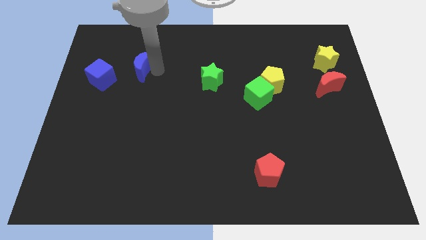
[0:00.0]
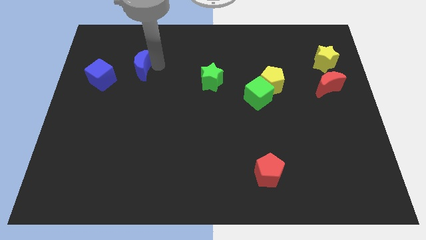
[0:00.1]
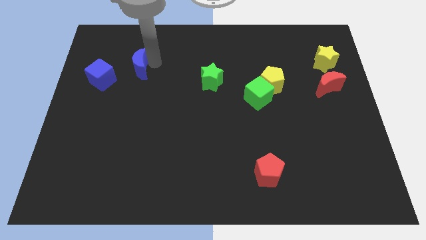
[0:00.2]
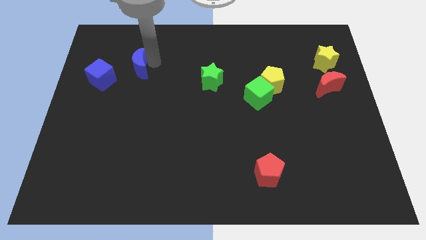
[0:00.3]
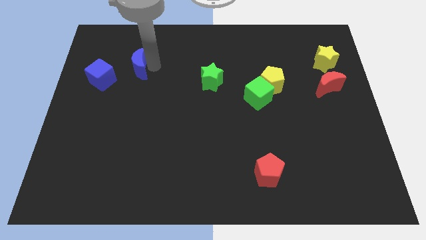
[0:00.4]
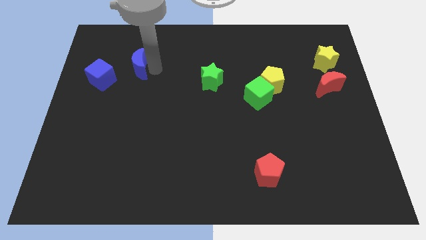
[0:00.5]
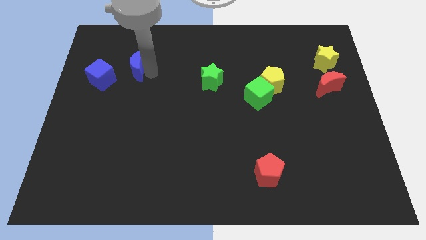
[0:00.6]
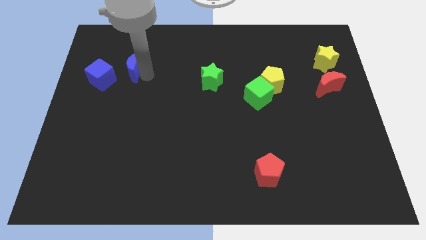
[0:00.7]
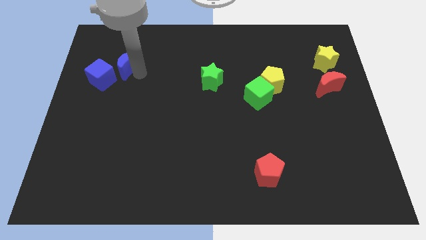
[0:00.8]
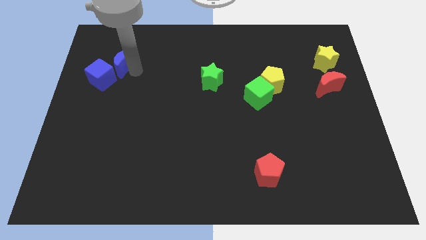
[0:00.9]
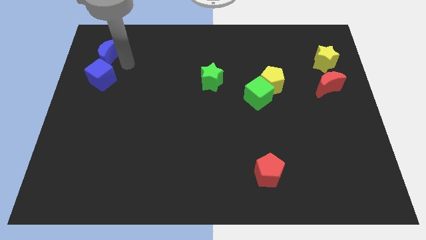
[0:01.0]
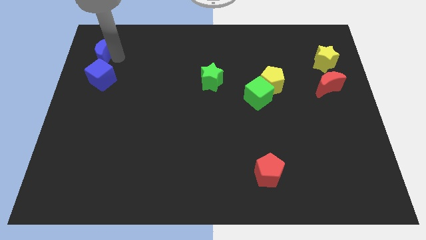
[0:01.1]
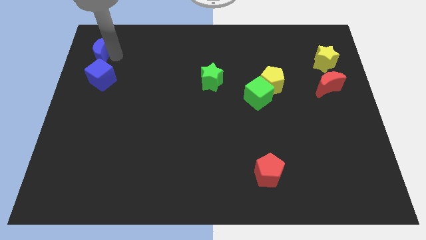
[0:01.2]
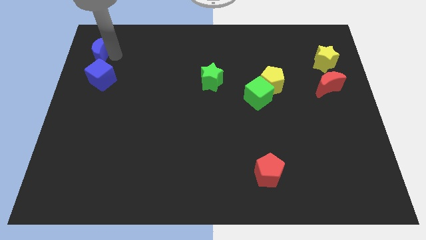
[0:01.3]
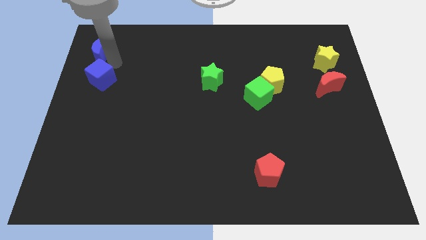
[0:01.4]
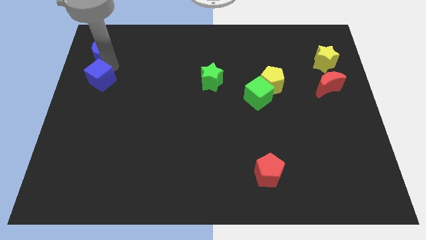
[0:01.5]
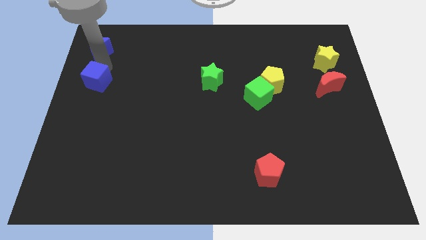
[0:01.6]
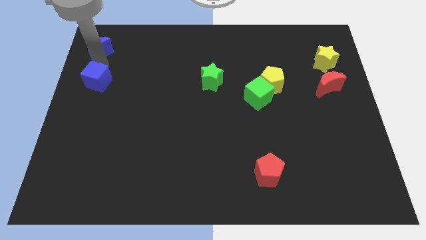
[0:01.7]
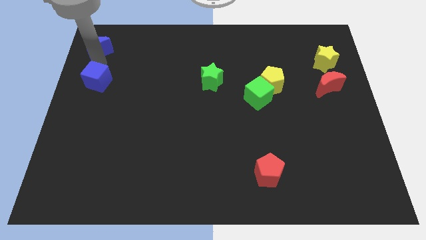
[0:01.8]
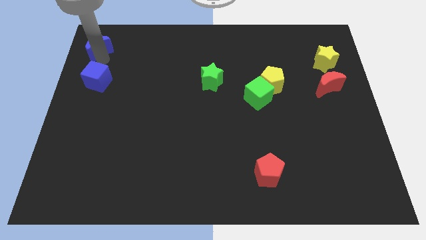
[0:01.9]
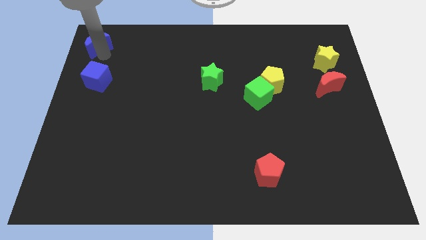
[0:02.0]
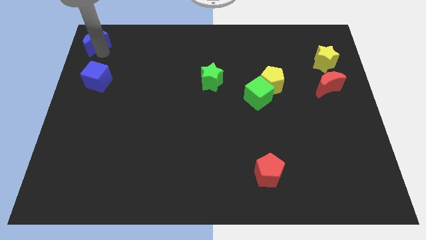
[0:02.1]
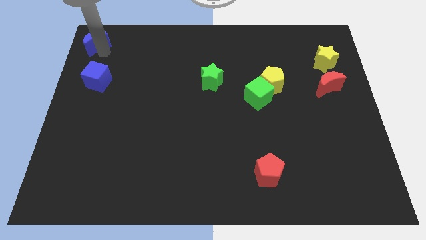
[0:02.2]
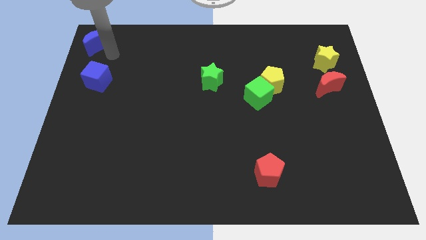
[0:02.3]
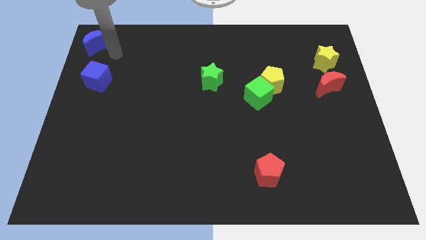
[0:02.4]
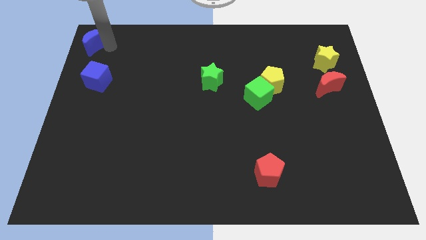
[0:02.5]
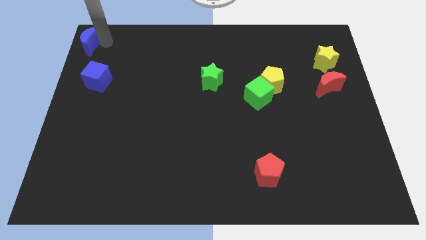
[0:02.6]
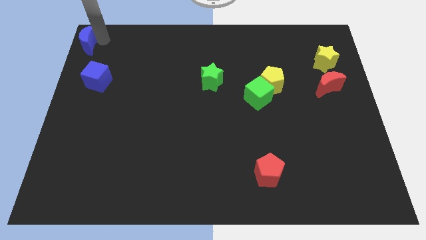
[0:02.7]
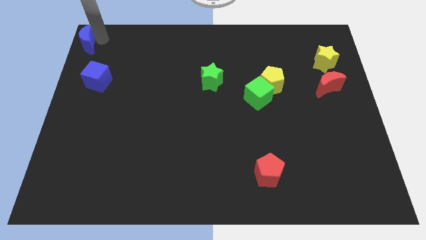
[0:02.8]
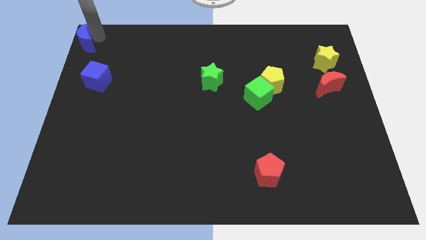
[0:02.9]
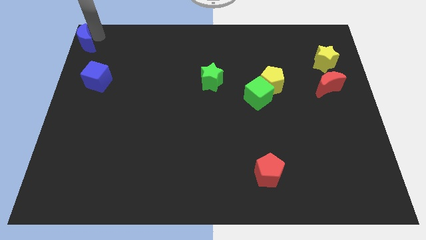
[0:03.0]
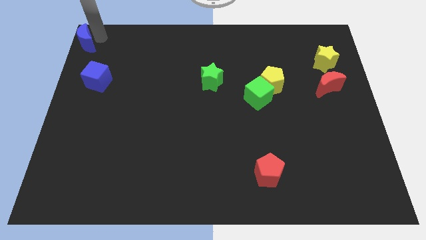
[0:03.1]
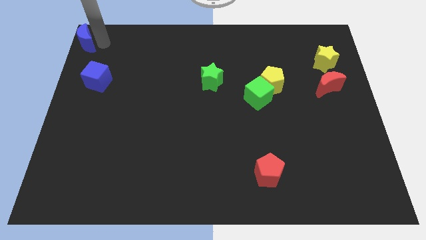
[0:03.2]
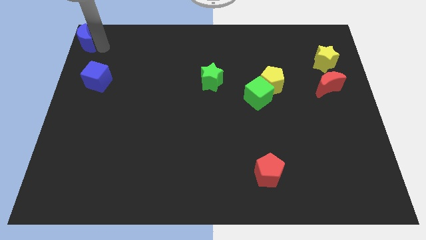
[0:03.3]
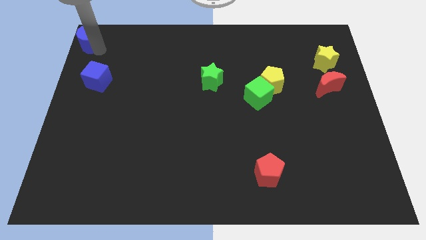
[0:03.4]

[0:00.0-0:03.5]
place the blue crescent at the top left corner of the board

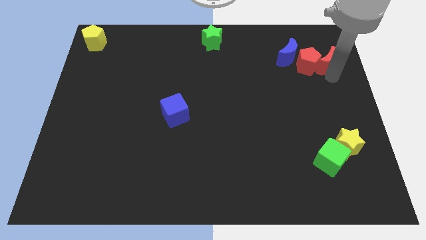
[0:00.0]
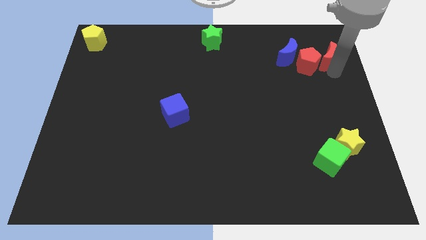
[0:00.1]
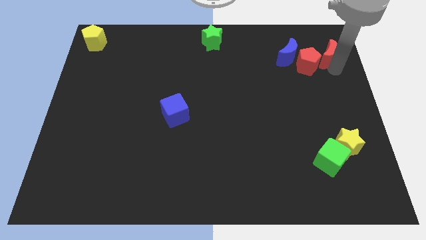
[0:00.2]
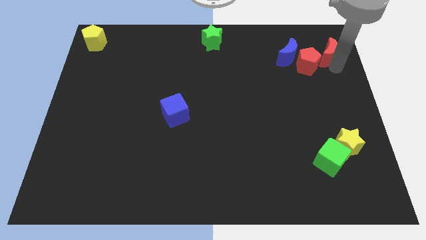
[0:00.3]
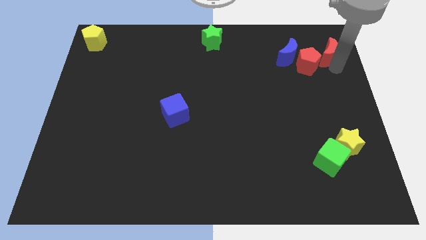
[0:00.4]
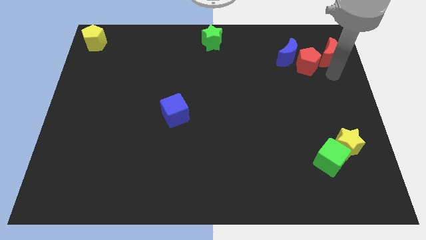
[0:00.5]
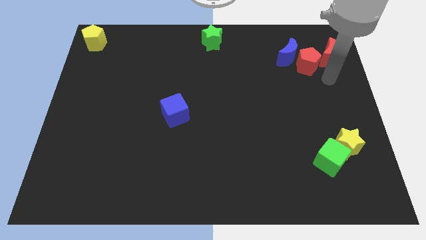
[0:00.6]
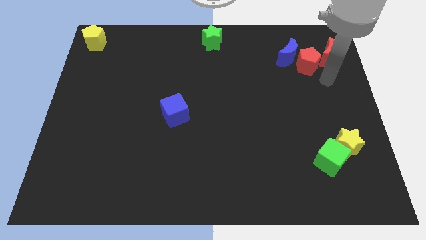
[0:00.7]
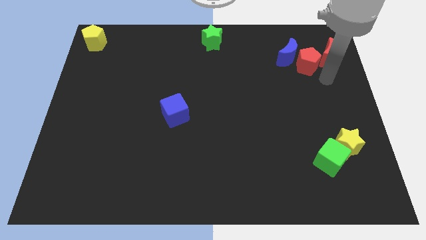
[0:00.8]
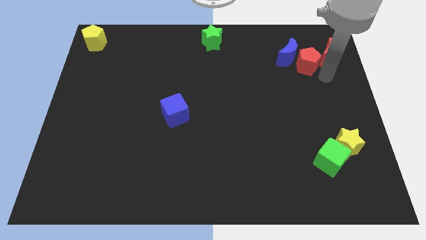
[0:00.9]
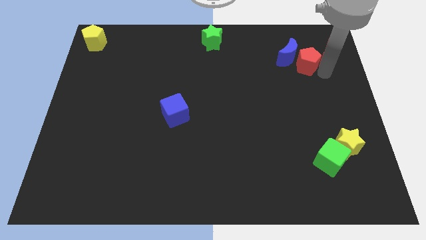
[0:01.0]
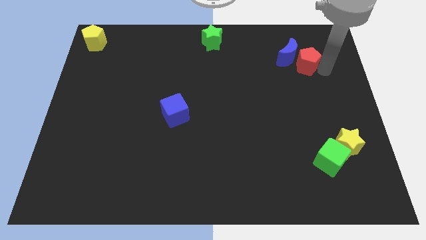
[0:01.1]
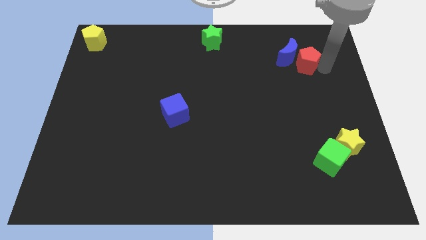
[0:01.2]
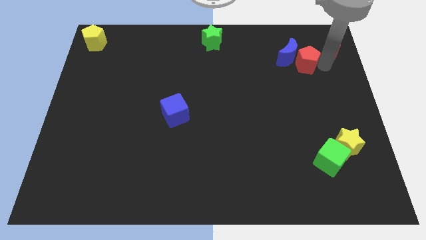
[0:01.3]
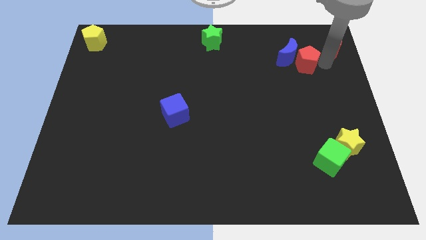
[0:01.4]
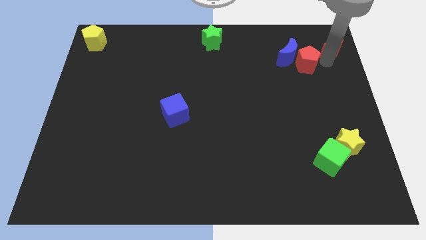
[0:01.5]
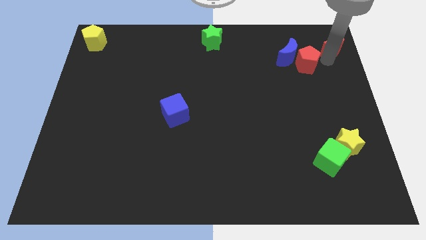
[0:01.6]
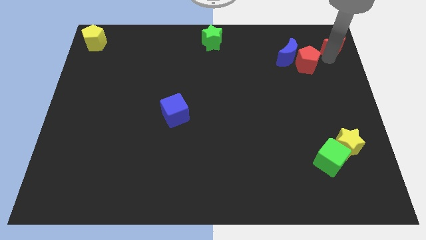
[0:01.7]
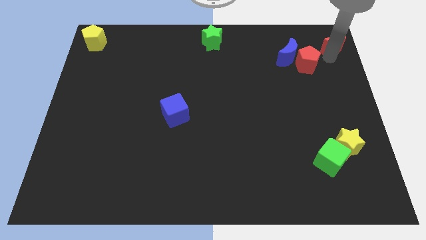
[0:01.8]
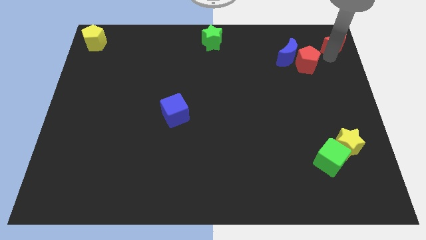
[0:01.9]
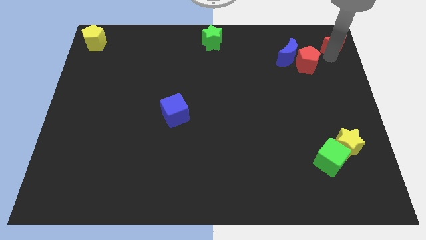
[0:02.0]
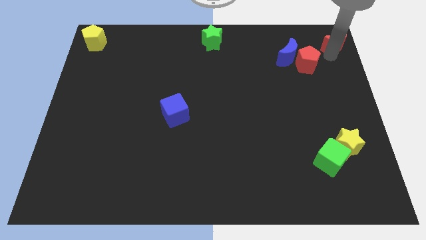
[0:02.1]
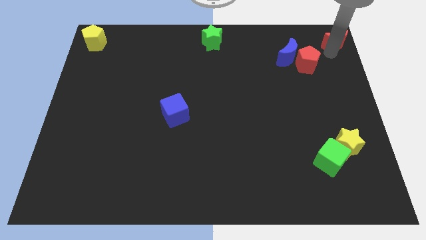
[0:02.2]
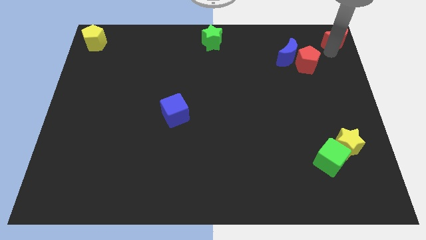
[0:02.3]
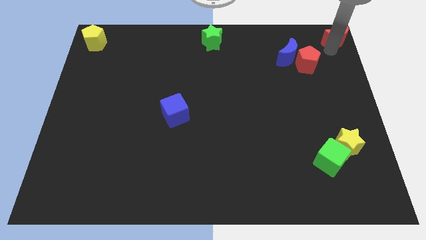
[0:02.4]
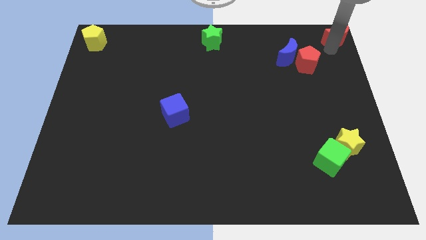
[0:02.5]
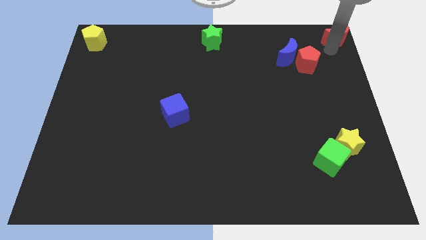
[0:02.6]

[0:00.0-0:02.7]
place the red moon on the top right corner of the board

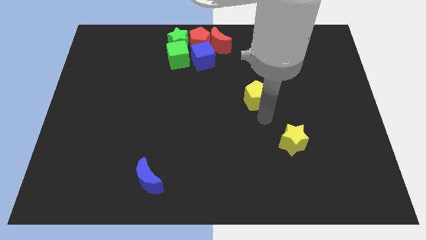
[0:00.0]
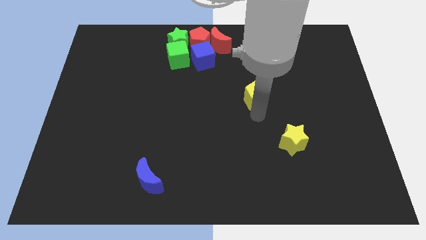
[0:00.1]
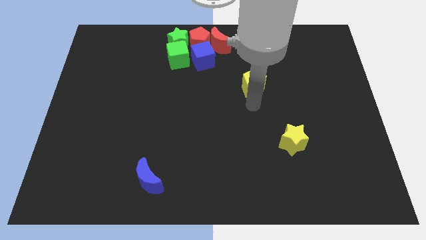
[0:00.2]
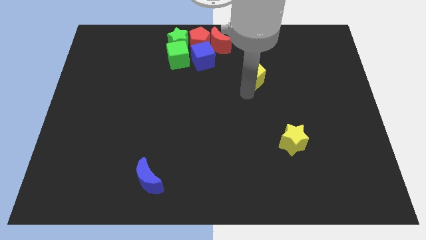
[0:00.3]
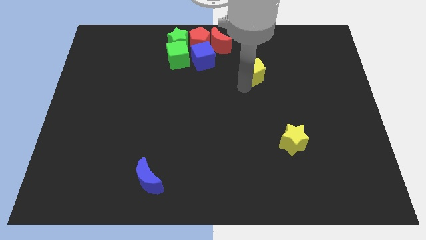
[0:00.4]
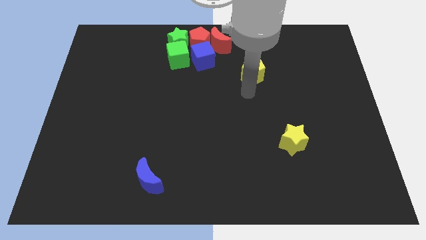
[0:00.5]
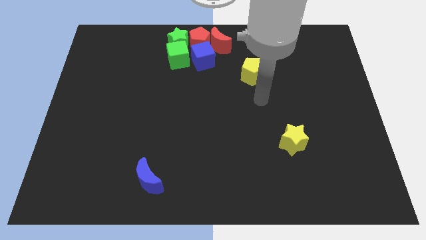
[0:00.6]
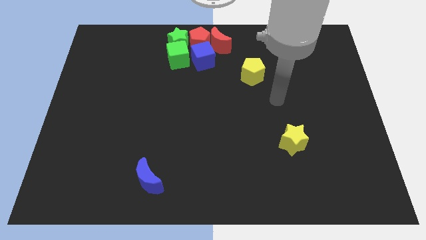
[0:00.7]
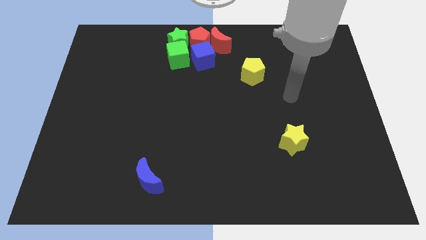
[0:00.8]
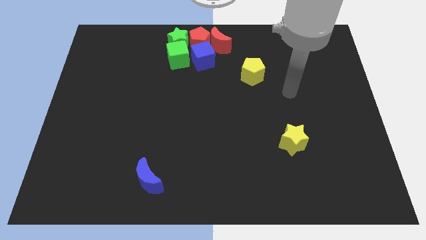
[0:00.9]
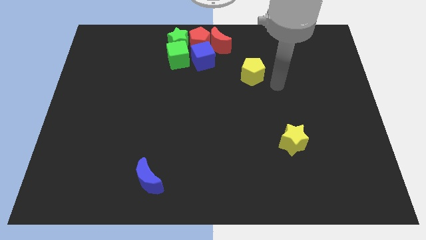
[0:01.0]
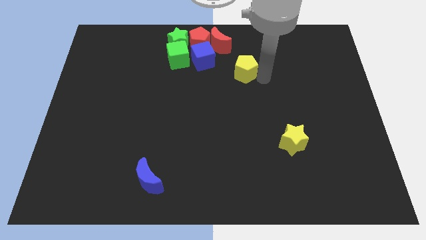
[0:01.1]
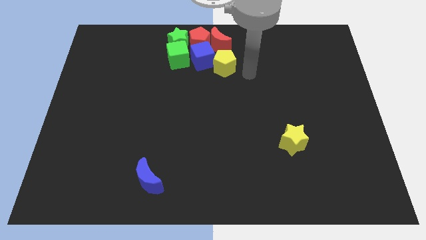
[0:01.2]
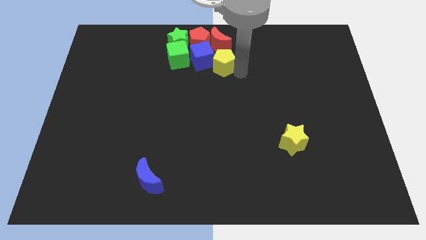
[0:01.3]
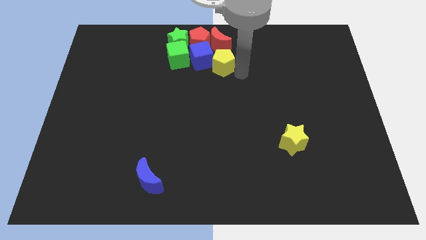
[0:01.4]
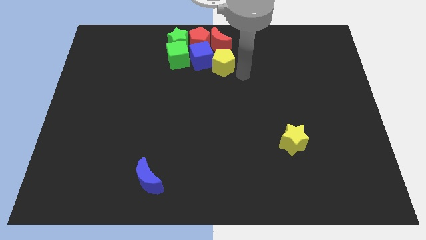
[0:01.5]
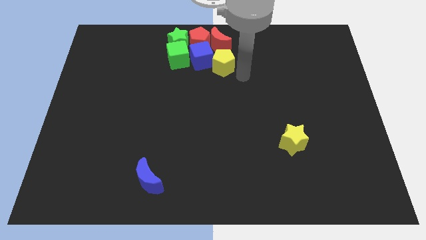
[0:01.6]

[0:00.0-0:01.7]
place the yellow pentagon below the red crescent

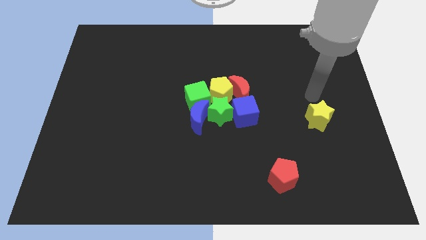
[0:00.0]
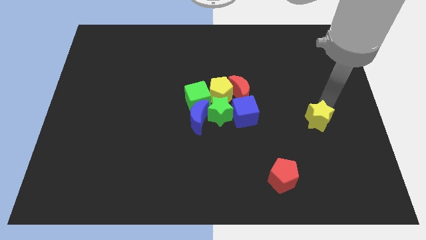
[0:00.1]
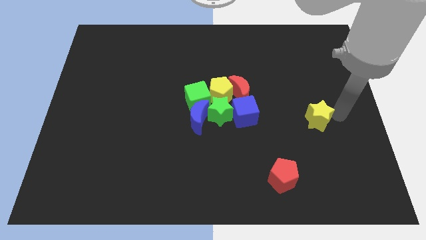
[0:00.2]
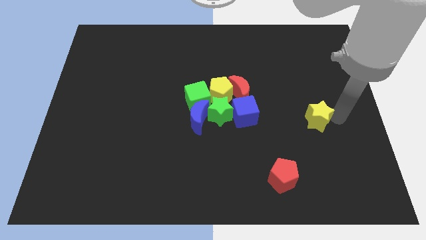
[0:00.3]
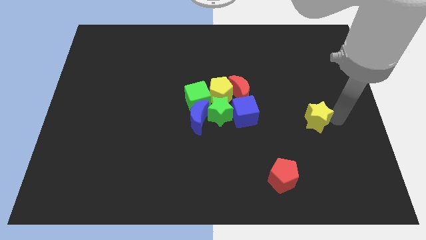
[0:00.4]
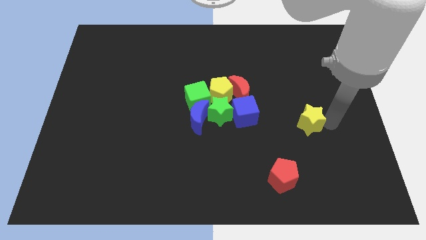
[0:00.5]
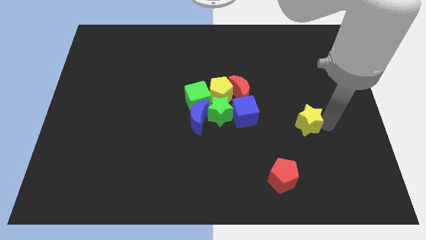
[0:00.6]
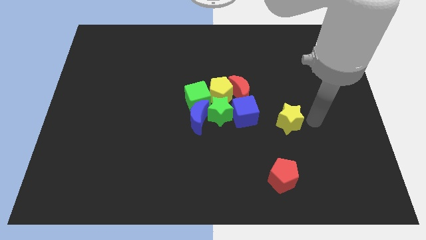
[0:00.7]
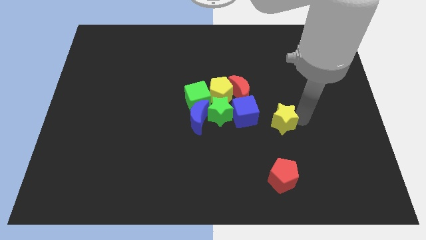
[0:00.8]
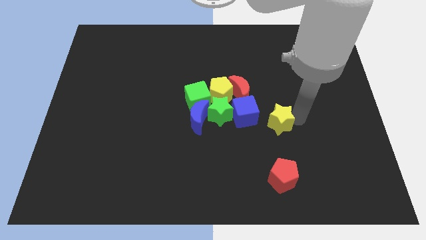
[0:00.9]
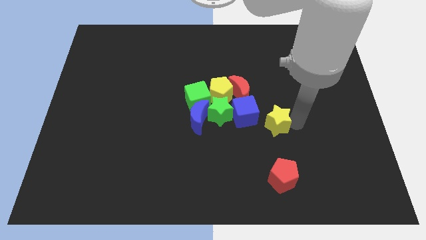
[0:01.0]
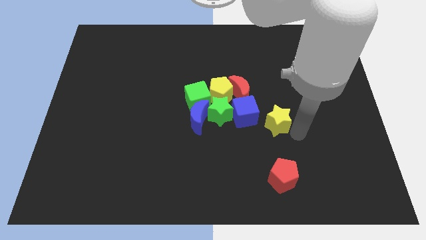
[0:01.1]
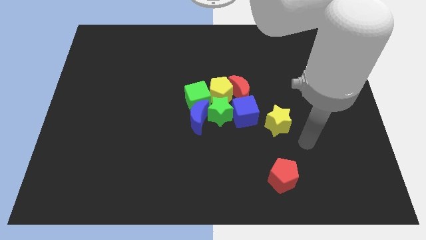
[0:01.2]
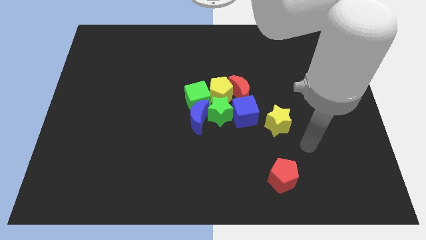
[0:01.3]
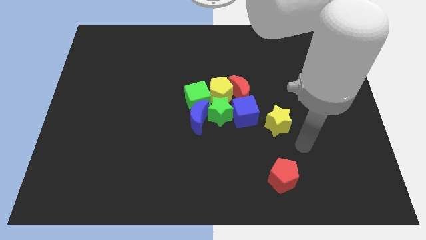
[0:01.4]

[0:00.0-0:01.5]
move the yellow star to the bottom right side of the blue cube
